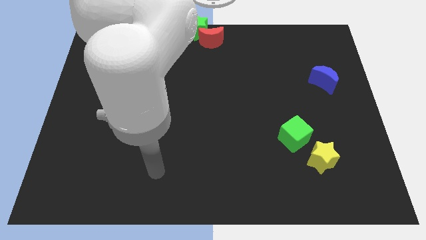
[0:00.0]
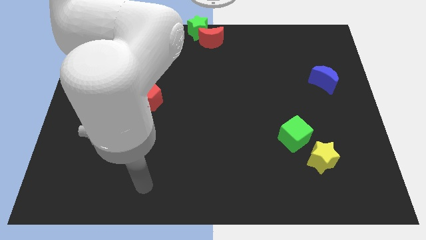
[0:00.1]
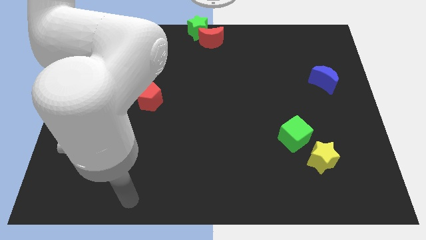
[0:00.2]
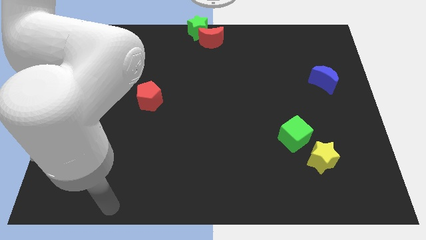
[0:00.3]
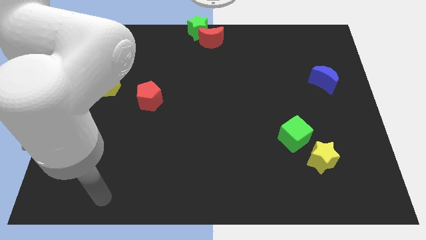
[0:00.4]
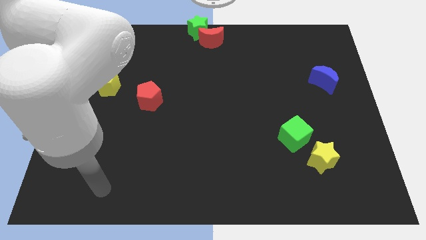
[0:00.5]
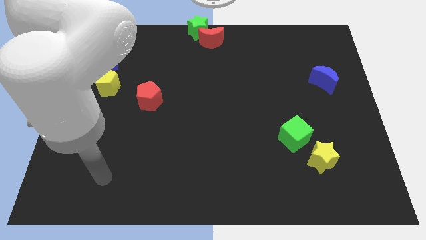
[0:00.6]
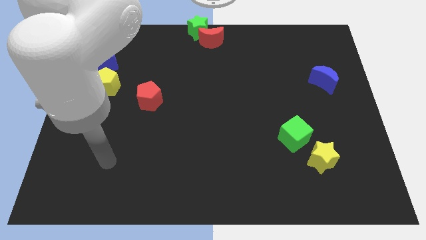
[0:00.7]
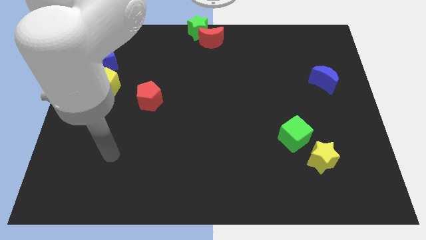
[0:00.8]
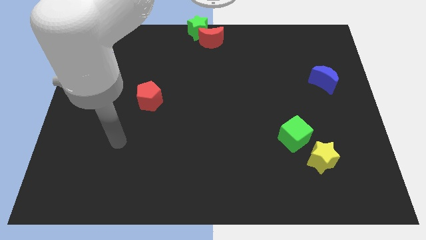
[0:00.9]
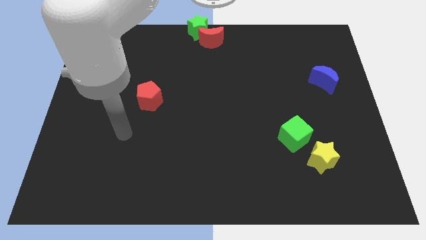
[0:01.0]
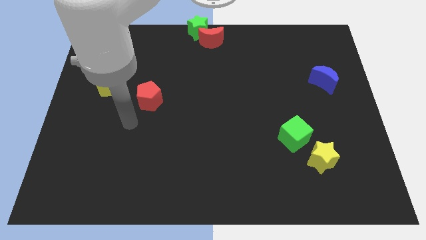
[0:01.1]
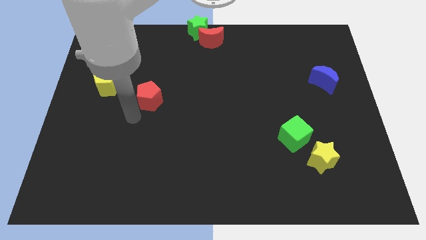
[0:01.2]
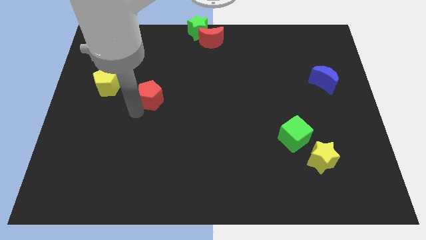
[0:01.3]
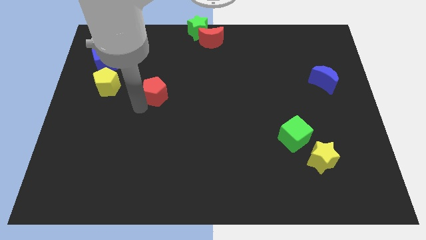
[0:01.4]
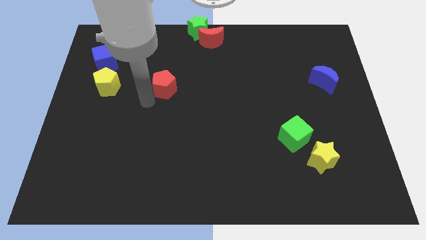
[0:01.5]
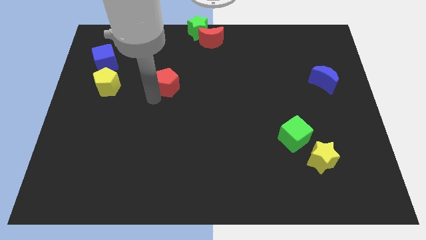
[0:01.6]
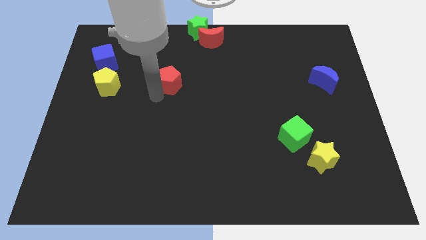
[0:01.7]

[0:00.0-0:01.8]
push the red pentagon to the right of the yellow pentagon

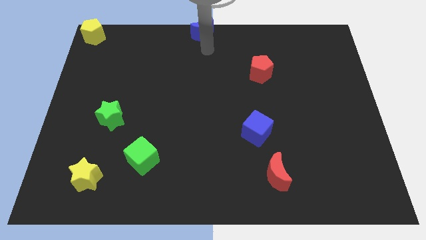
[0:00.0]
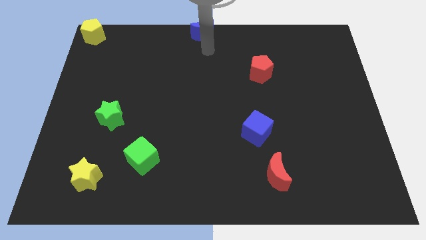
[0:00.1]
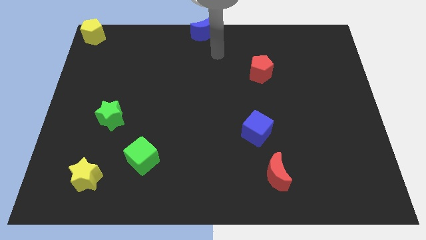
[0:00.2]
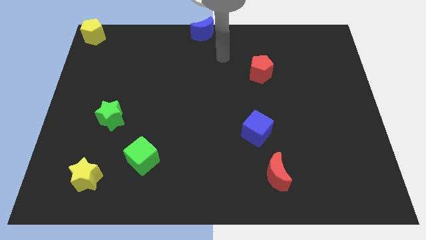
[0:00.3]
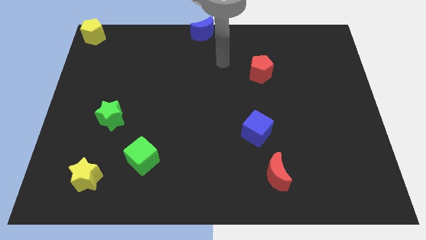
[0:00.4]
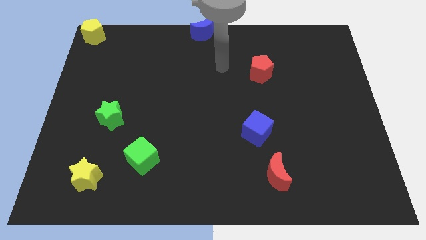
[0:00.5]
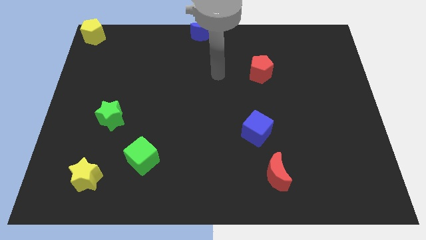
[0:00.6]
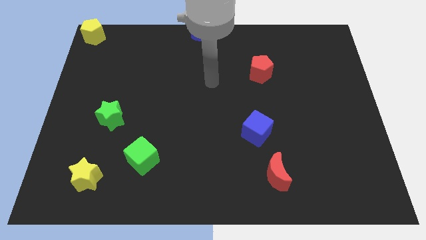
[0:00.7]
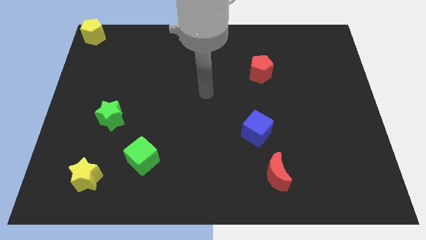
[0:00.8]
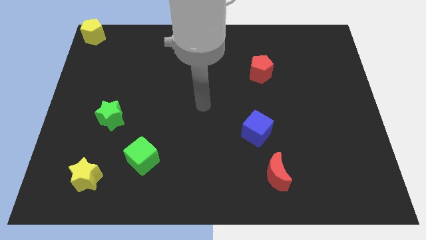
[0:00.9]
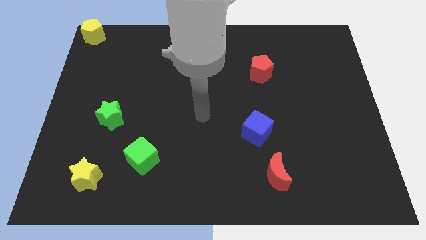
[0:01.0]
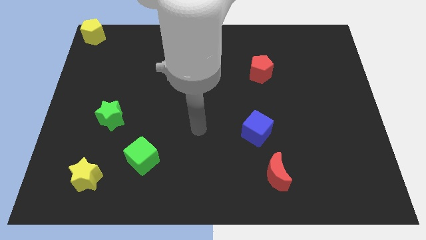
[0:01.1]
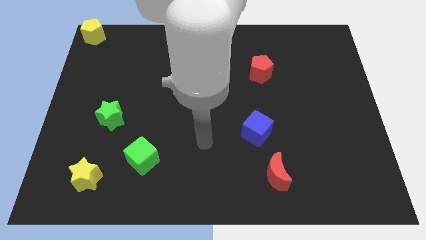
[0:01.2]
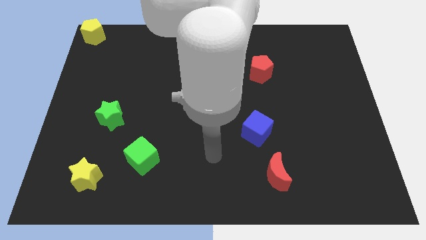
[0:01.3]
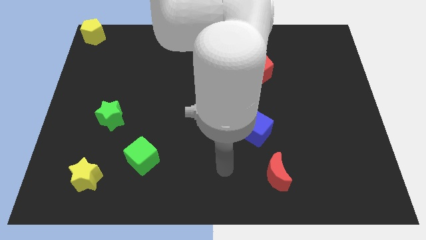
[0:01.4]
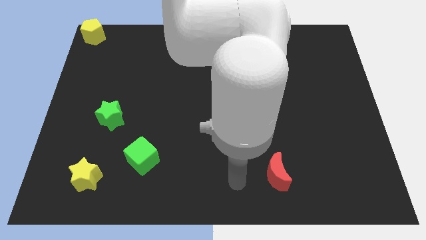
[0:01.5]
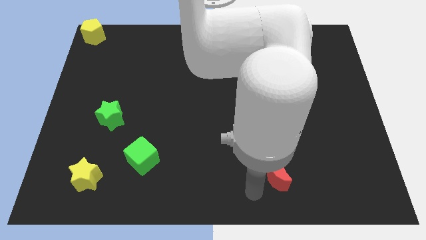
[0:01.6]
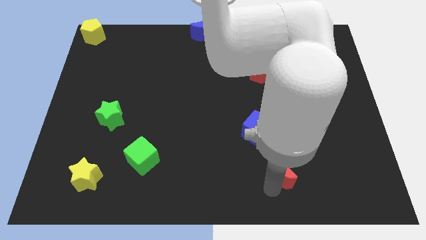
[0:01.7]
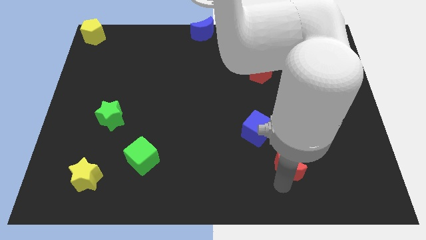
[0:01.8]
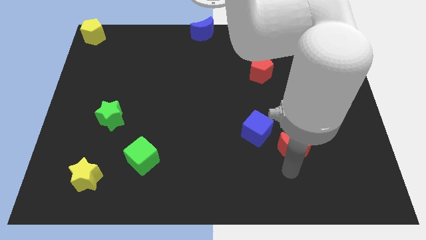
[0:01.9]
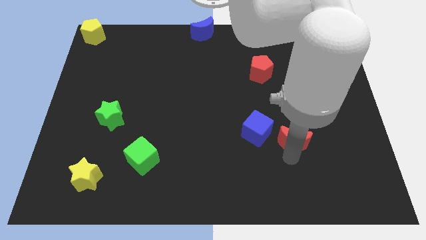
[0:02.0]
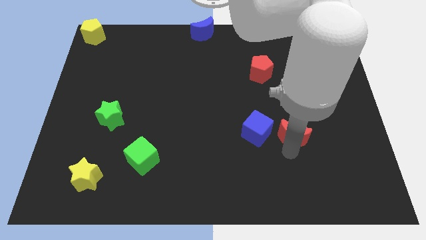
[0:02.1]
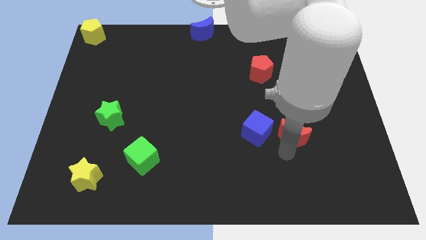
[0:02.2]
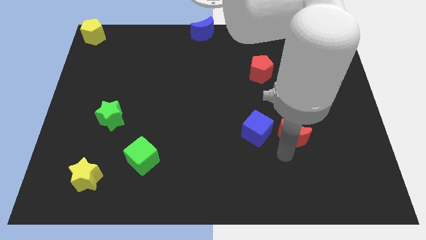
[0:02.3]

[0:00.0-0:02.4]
place red moon to the right of blue cube

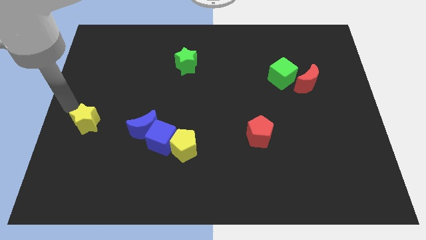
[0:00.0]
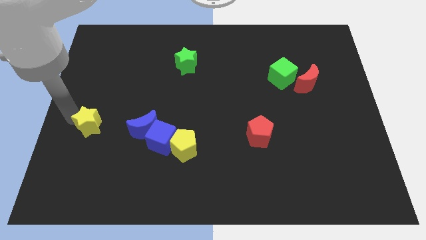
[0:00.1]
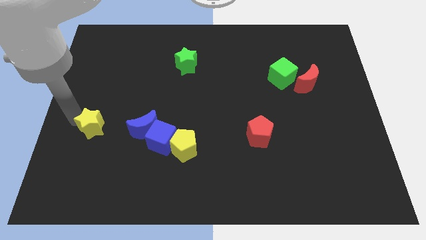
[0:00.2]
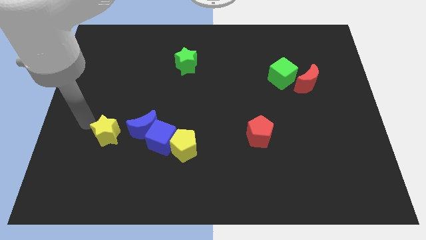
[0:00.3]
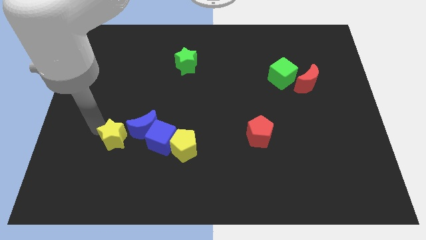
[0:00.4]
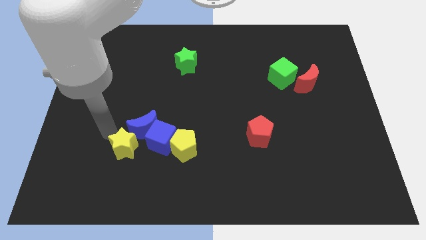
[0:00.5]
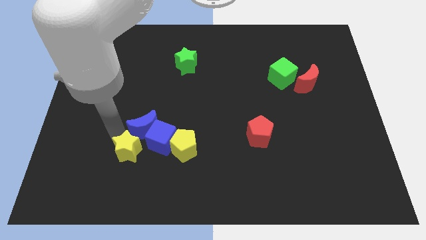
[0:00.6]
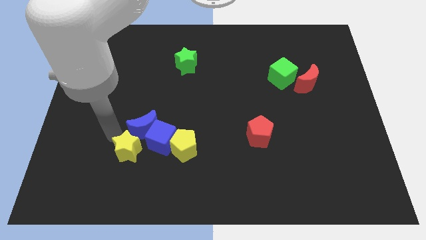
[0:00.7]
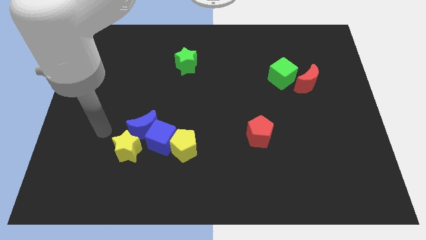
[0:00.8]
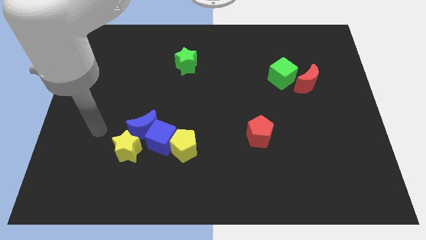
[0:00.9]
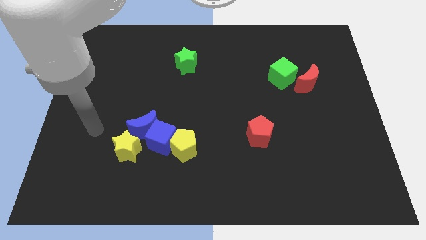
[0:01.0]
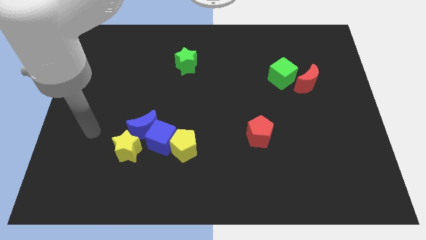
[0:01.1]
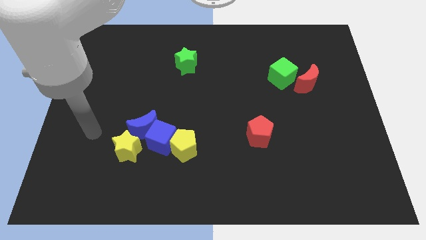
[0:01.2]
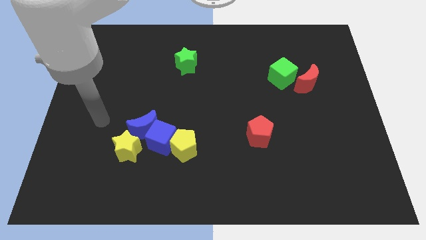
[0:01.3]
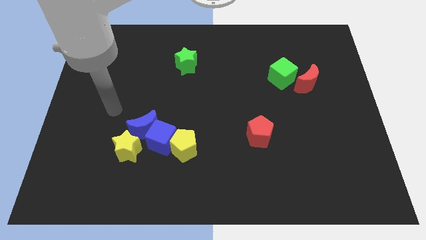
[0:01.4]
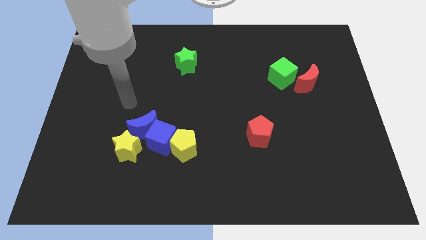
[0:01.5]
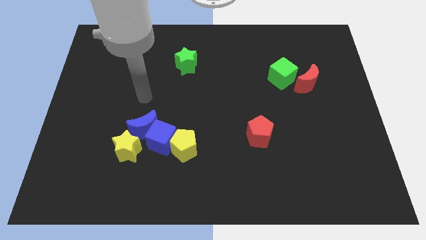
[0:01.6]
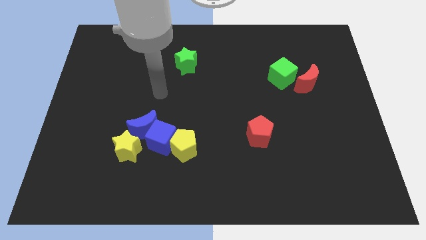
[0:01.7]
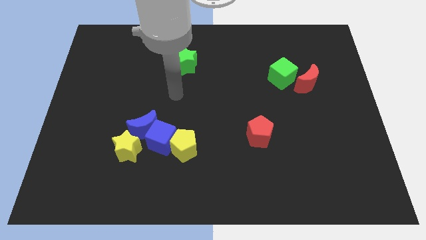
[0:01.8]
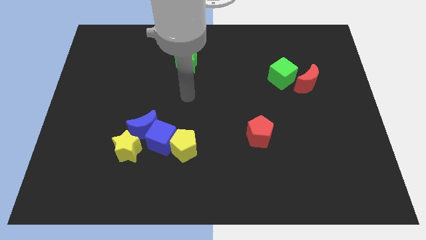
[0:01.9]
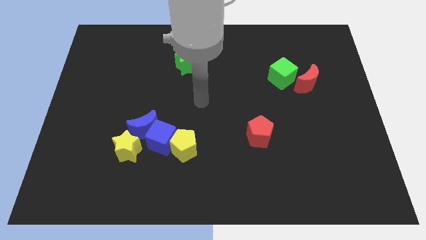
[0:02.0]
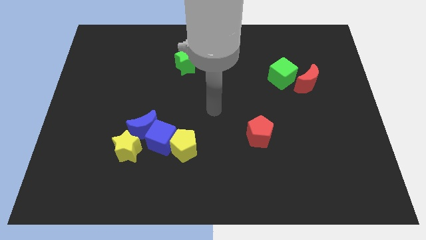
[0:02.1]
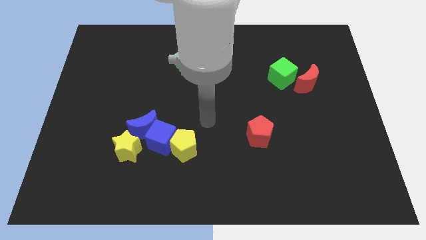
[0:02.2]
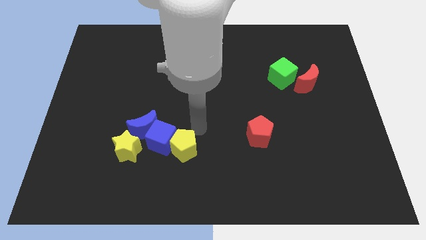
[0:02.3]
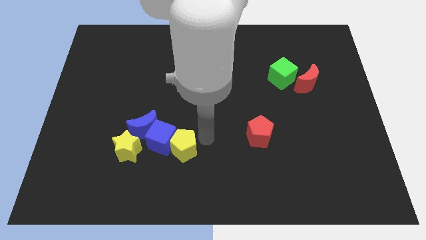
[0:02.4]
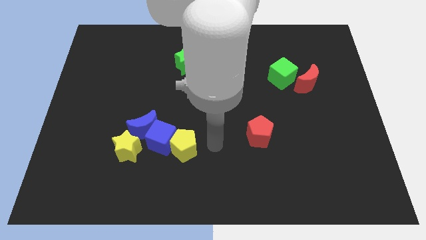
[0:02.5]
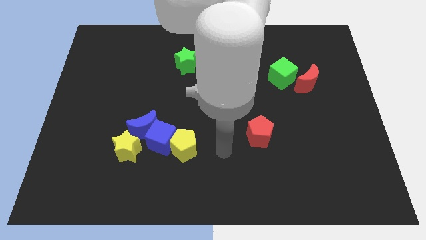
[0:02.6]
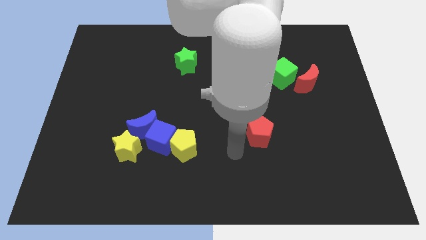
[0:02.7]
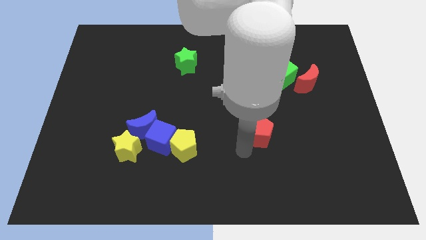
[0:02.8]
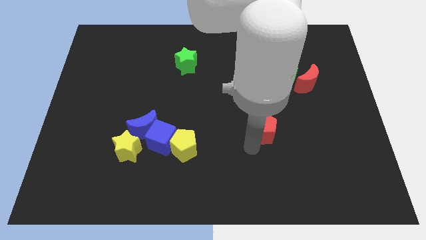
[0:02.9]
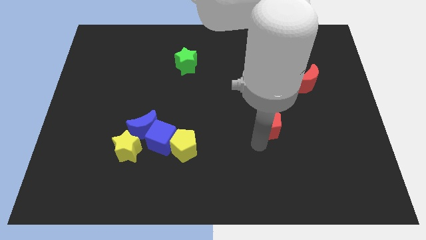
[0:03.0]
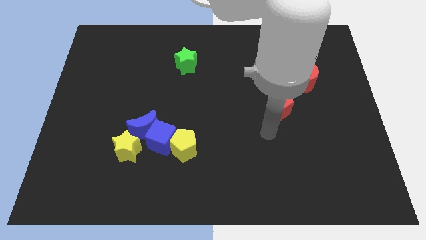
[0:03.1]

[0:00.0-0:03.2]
place yellow star below blue moon

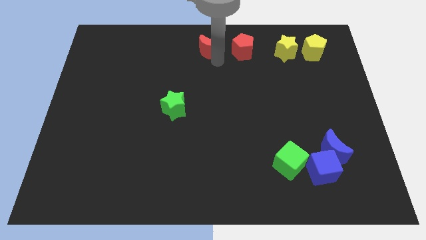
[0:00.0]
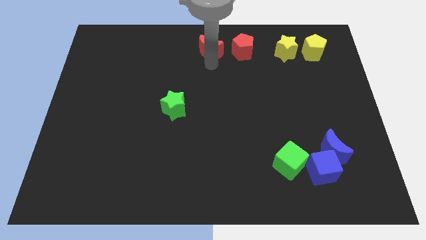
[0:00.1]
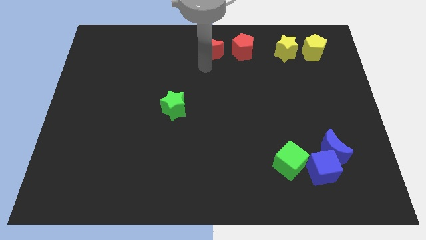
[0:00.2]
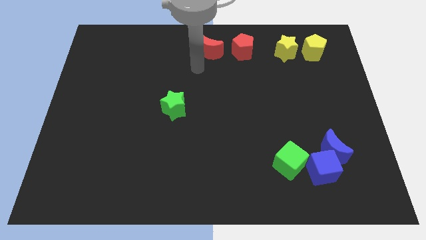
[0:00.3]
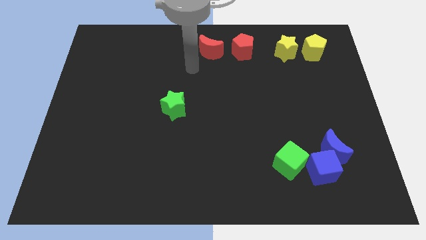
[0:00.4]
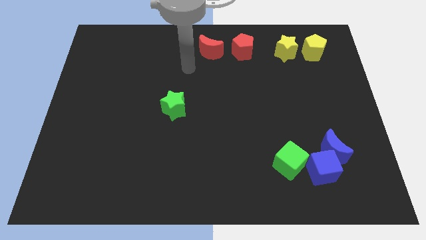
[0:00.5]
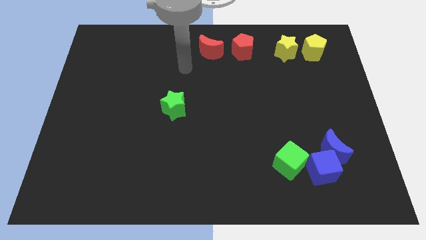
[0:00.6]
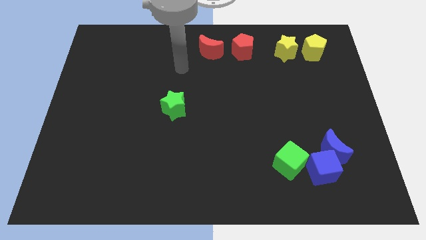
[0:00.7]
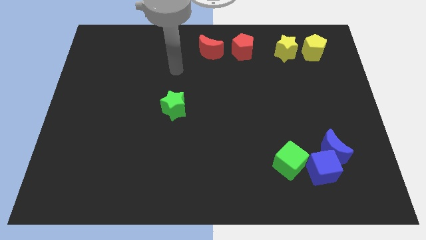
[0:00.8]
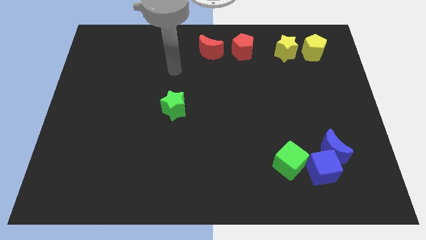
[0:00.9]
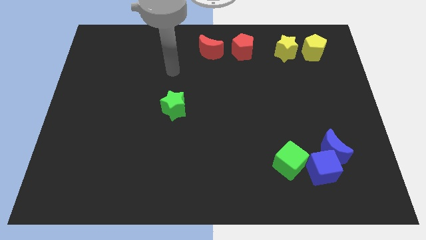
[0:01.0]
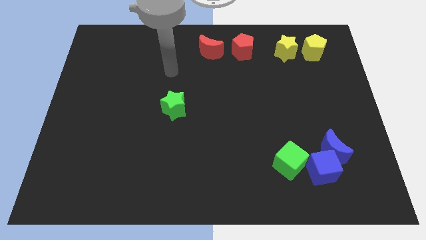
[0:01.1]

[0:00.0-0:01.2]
move your arm away from red moon

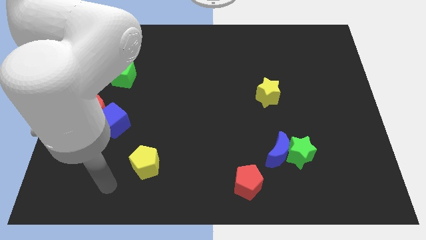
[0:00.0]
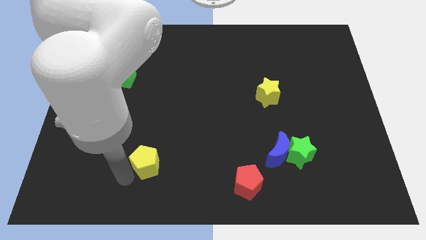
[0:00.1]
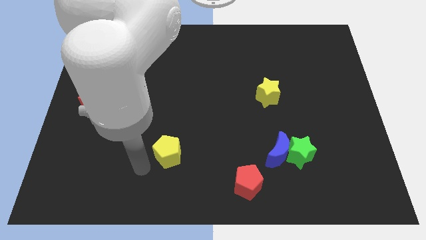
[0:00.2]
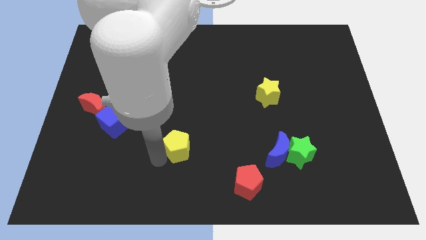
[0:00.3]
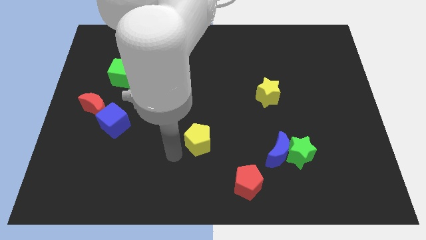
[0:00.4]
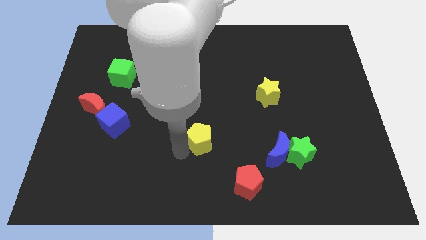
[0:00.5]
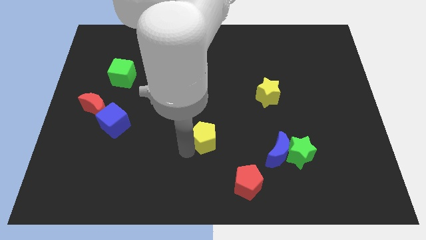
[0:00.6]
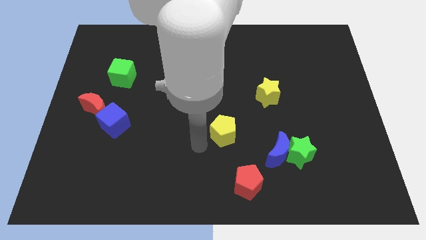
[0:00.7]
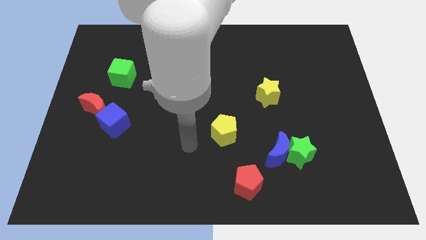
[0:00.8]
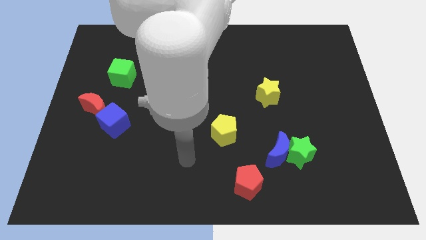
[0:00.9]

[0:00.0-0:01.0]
place the yellow pentagon above the red pentagon
